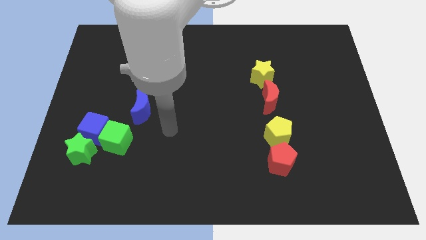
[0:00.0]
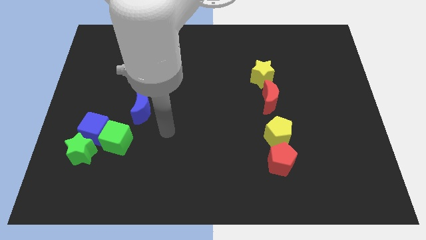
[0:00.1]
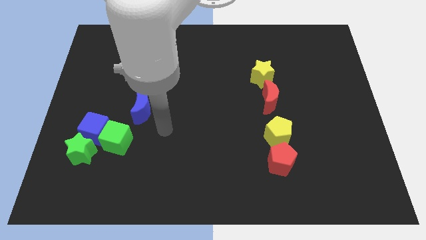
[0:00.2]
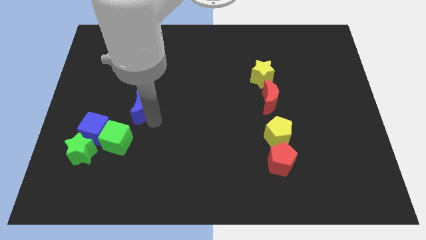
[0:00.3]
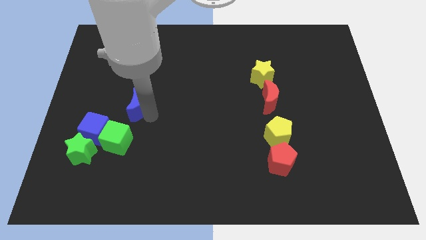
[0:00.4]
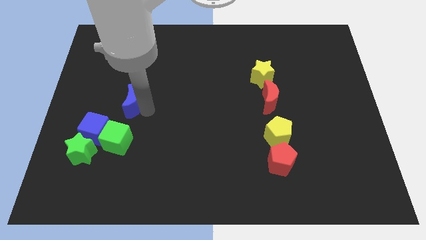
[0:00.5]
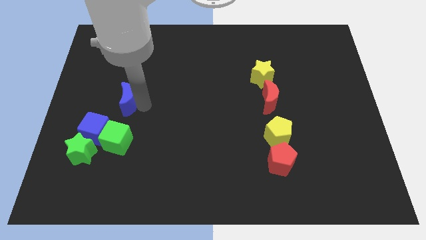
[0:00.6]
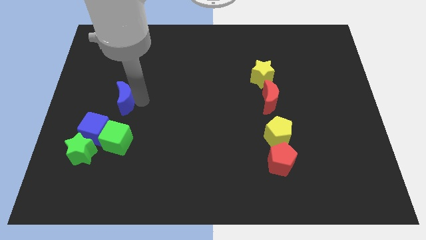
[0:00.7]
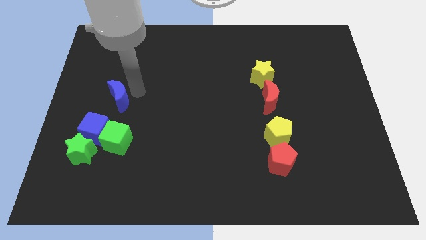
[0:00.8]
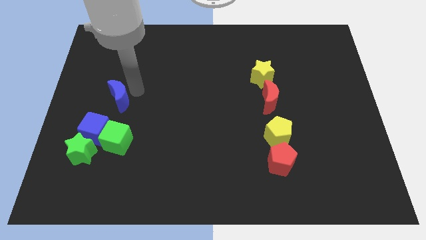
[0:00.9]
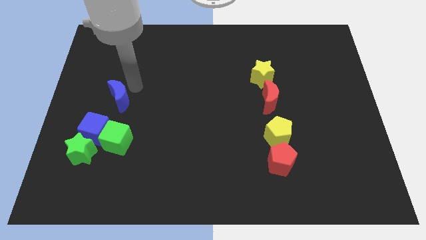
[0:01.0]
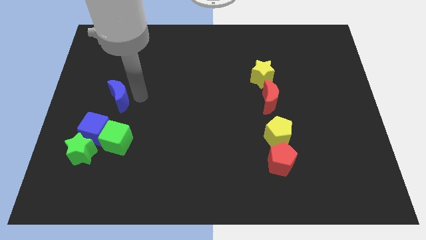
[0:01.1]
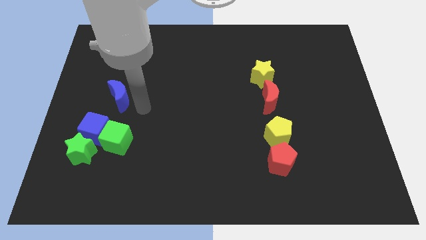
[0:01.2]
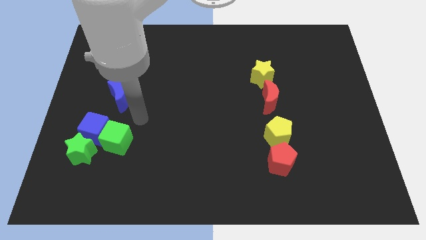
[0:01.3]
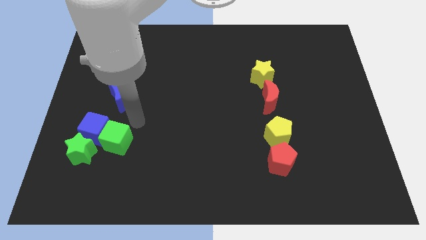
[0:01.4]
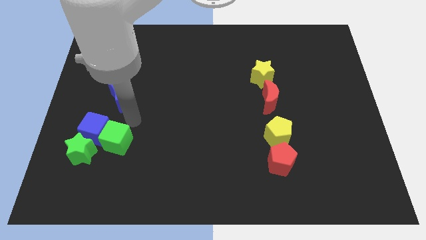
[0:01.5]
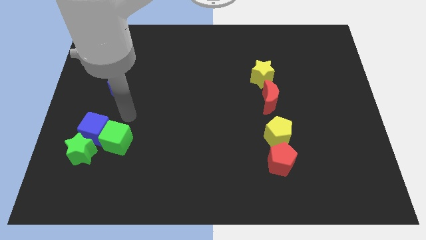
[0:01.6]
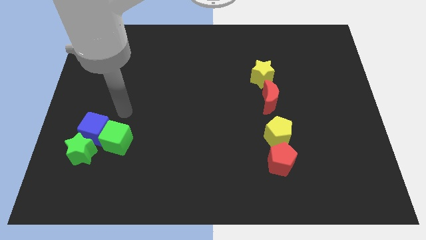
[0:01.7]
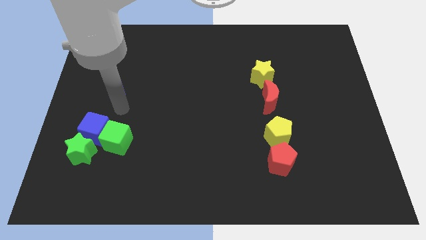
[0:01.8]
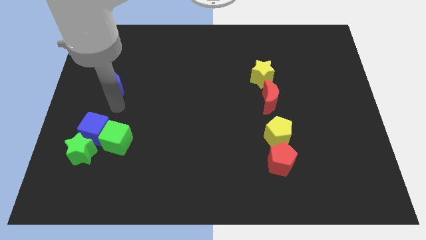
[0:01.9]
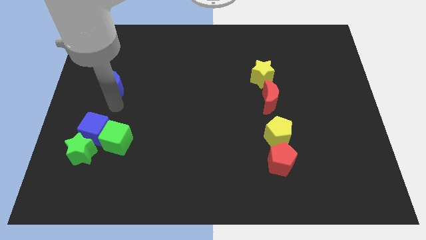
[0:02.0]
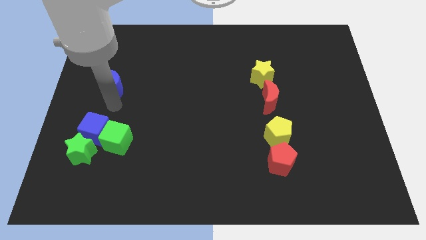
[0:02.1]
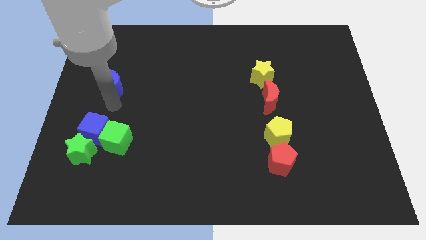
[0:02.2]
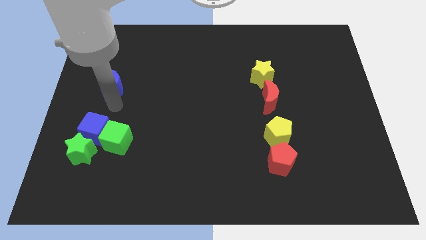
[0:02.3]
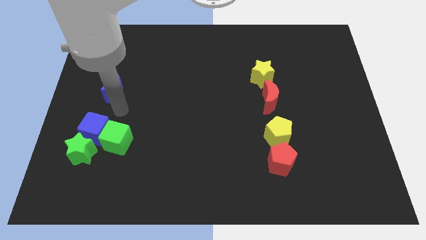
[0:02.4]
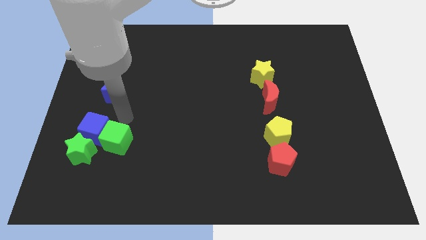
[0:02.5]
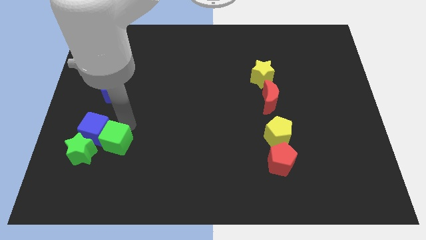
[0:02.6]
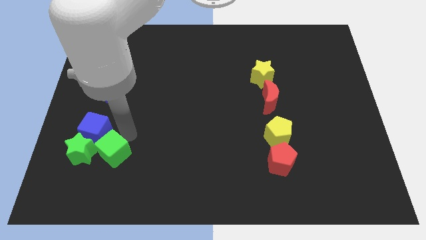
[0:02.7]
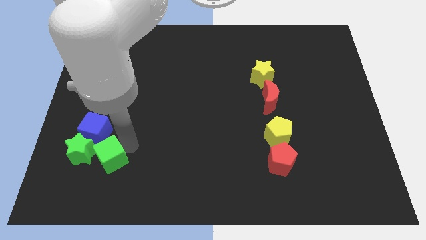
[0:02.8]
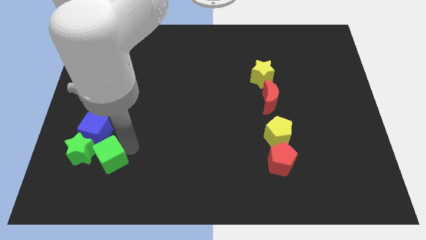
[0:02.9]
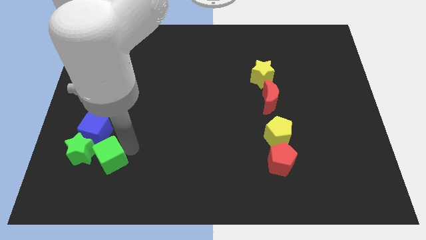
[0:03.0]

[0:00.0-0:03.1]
move the blue moon to the top side of the blue cube

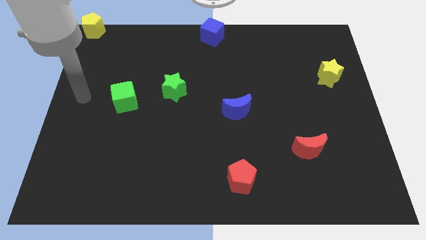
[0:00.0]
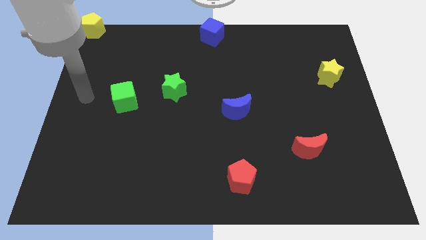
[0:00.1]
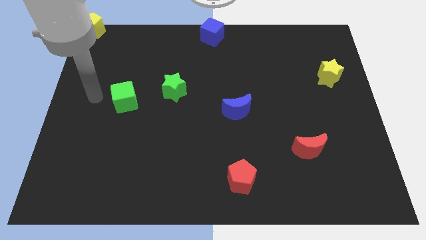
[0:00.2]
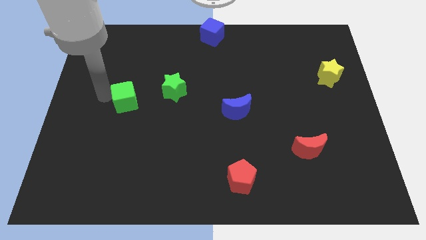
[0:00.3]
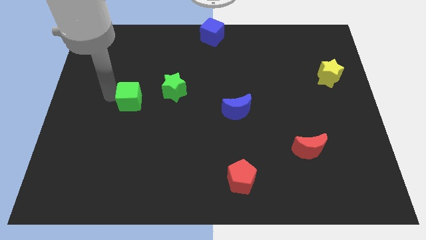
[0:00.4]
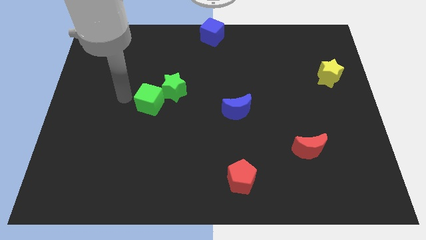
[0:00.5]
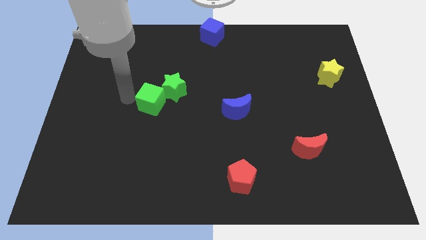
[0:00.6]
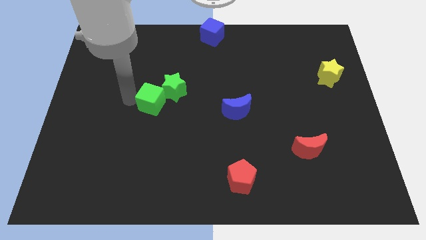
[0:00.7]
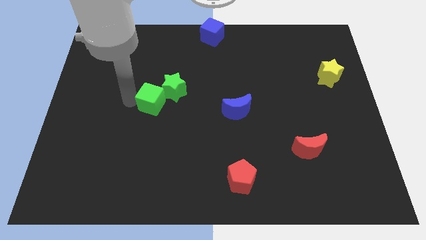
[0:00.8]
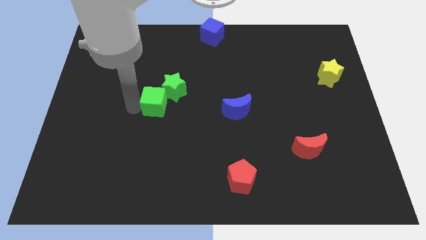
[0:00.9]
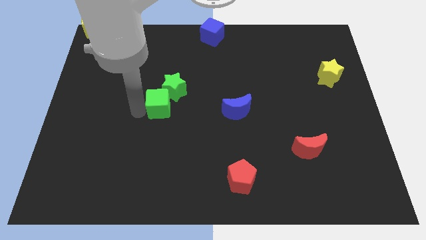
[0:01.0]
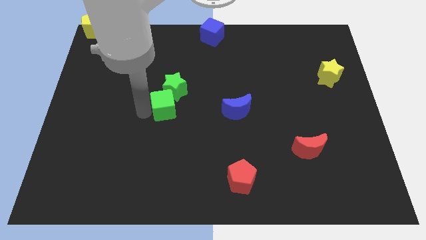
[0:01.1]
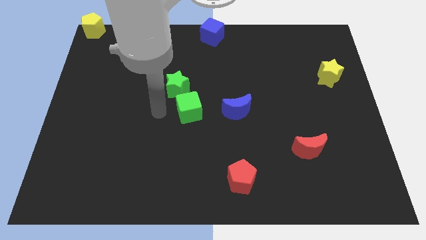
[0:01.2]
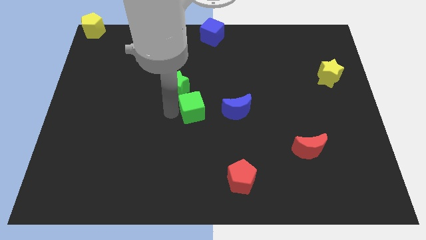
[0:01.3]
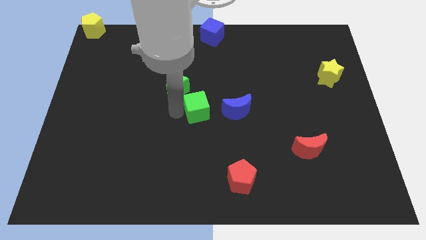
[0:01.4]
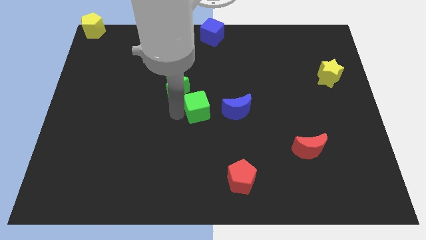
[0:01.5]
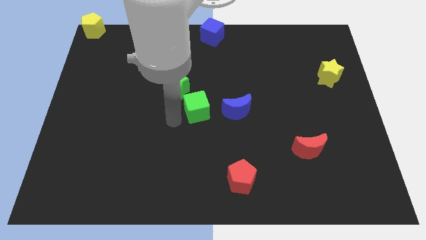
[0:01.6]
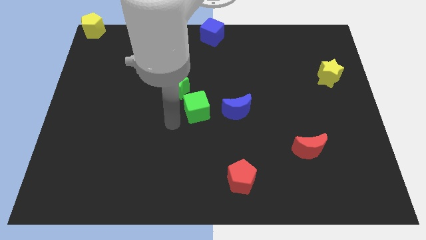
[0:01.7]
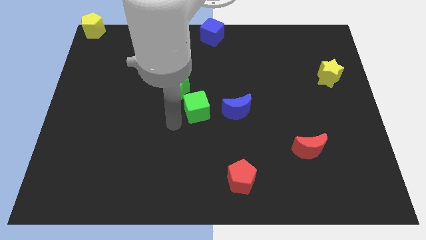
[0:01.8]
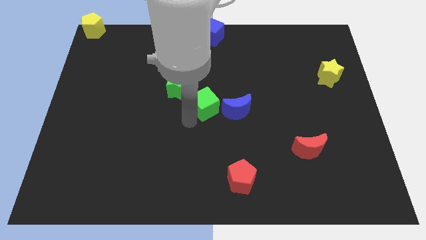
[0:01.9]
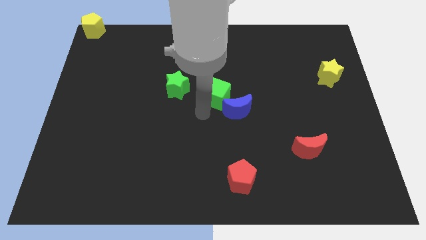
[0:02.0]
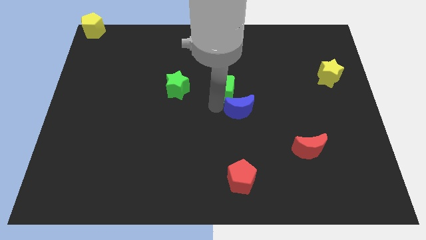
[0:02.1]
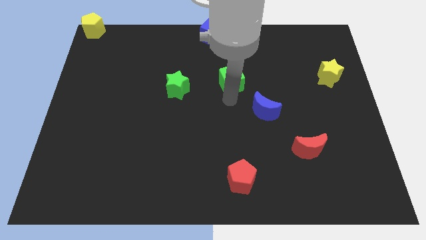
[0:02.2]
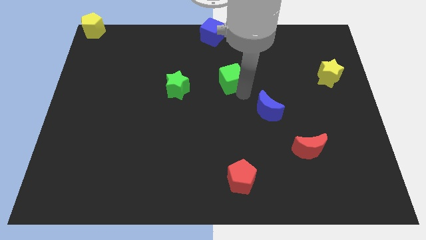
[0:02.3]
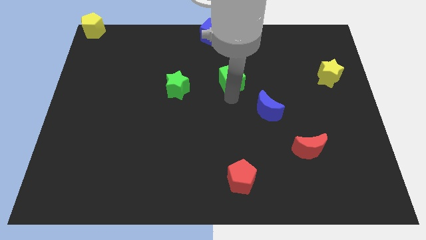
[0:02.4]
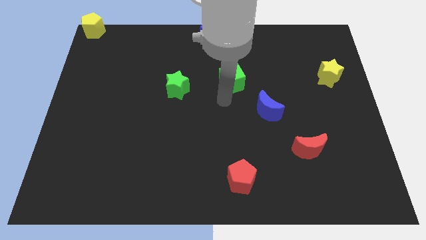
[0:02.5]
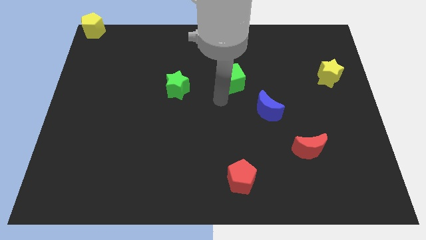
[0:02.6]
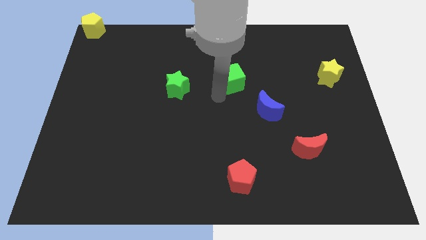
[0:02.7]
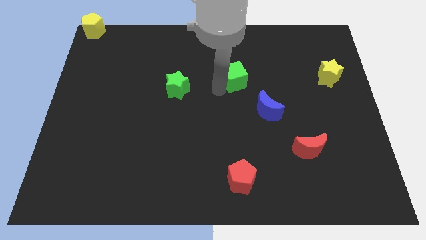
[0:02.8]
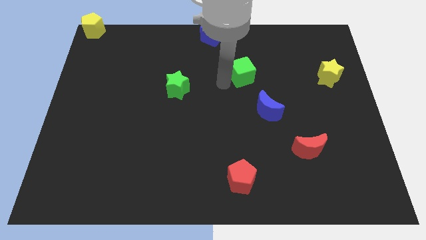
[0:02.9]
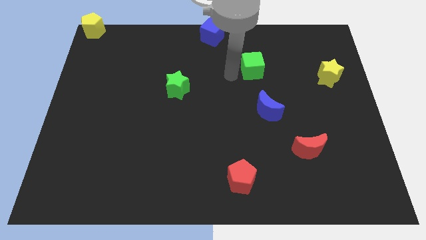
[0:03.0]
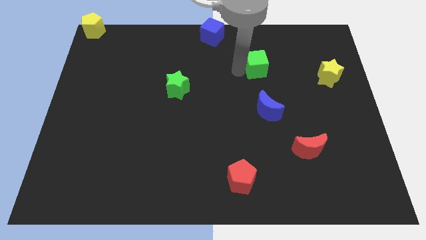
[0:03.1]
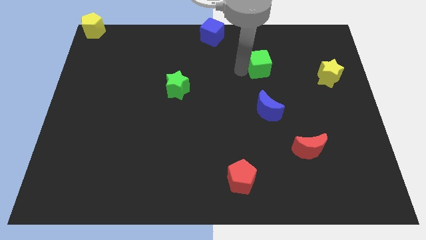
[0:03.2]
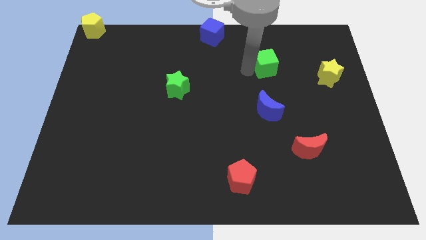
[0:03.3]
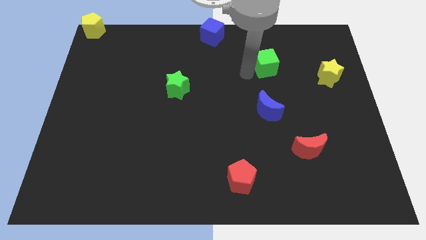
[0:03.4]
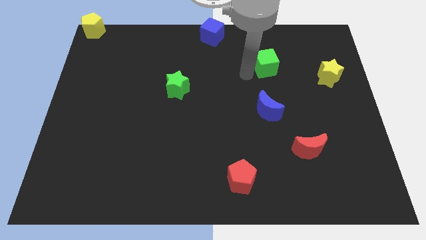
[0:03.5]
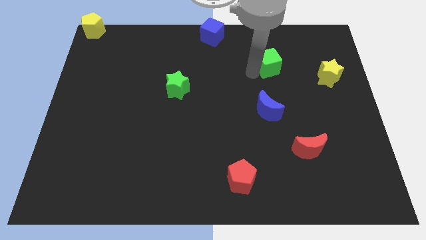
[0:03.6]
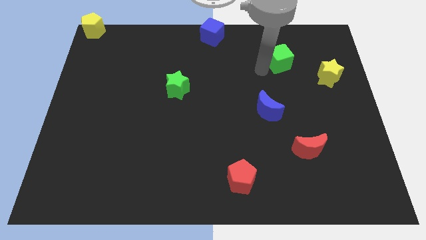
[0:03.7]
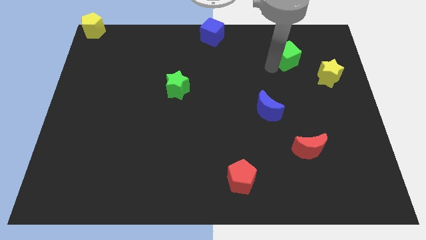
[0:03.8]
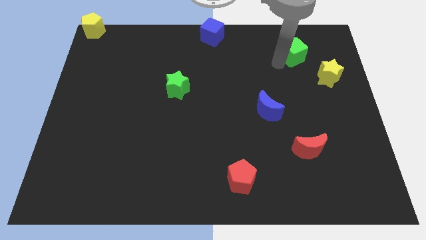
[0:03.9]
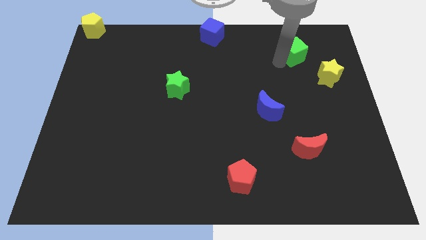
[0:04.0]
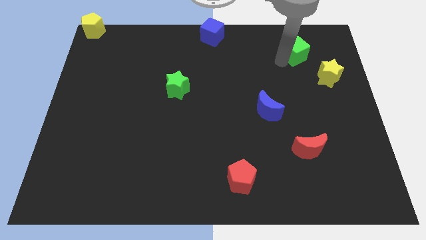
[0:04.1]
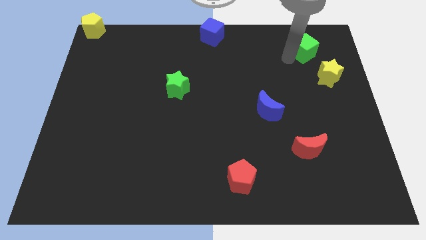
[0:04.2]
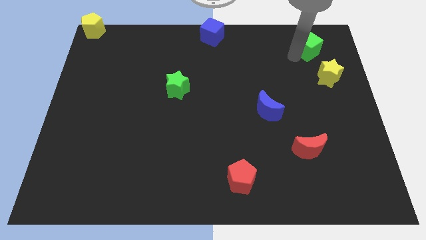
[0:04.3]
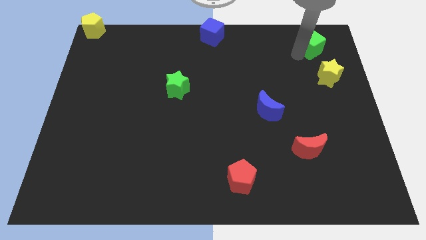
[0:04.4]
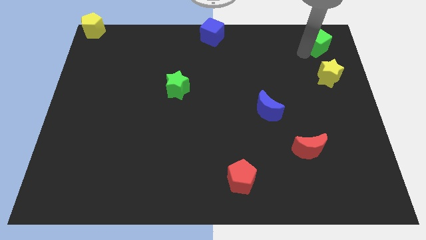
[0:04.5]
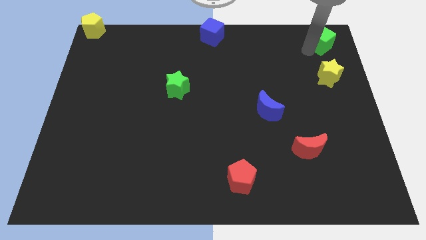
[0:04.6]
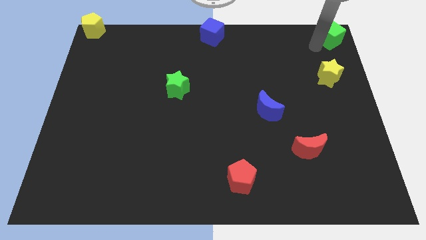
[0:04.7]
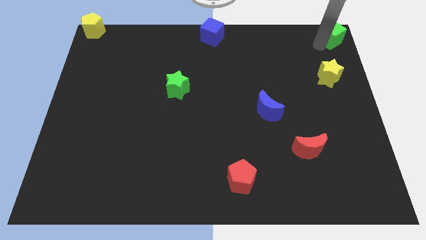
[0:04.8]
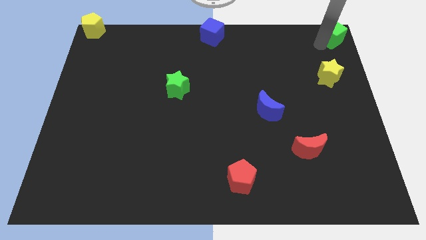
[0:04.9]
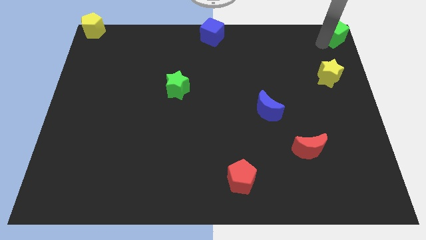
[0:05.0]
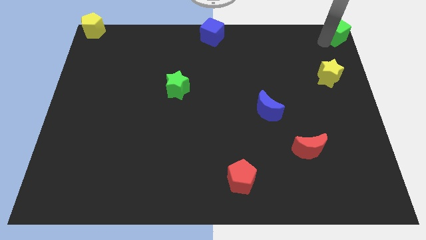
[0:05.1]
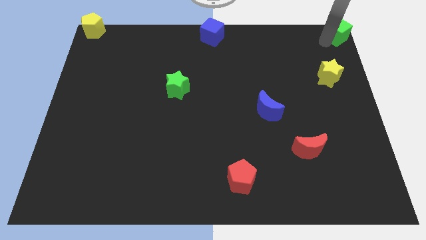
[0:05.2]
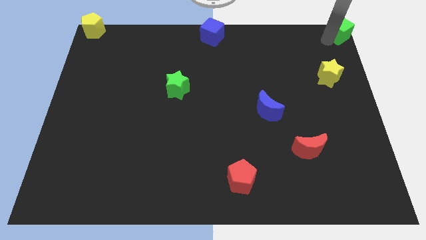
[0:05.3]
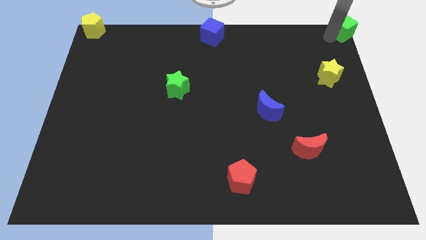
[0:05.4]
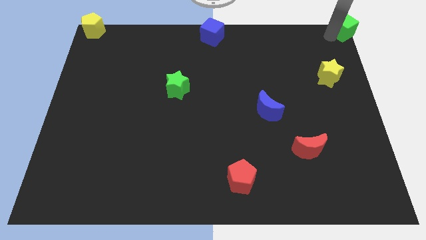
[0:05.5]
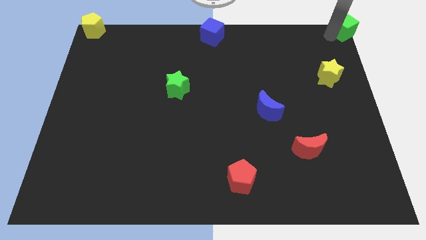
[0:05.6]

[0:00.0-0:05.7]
place the green cube to the top right corner of the board
